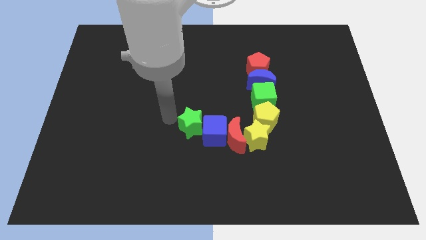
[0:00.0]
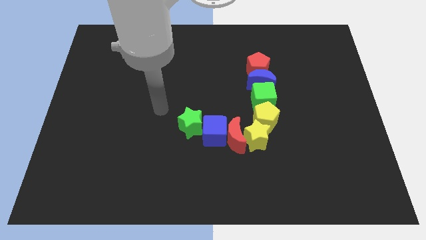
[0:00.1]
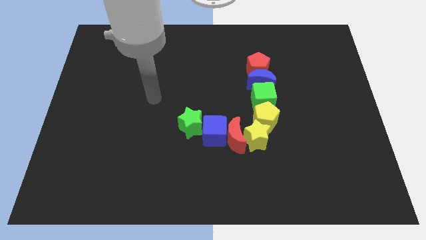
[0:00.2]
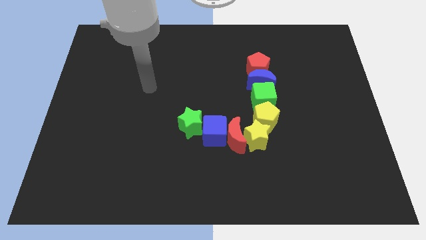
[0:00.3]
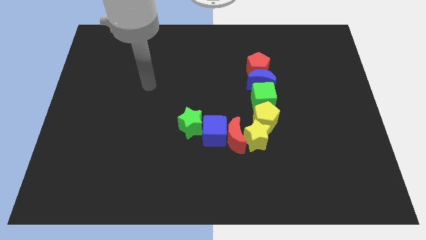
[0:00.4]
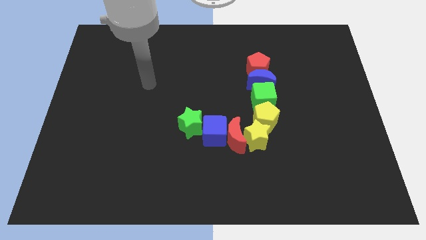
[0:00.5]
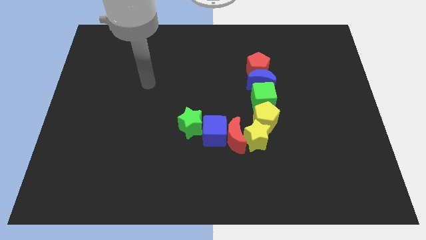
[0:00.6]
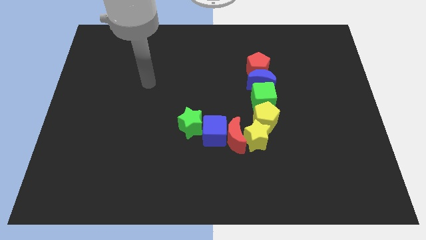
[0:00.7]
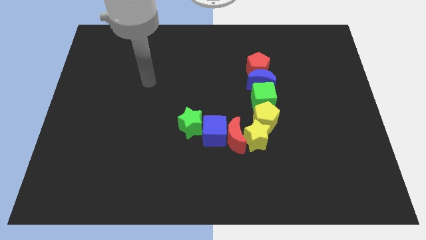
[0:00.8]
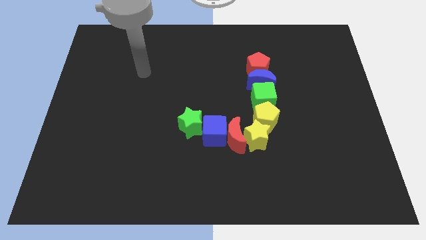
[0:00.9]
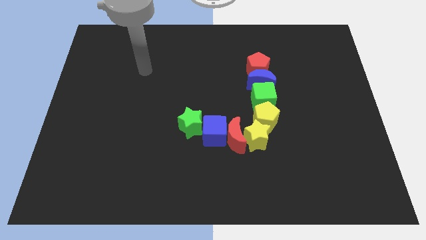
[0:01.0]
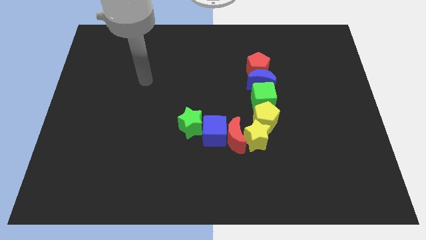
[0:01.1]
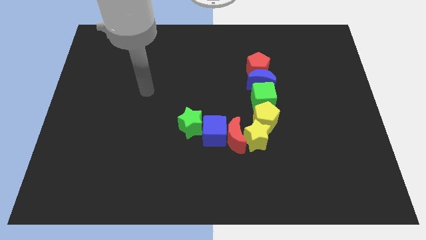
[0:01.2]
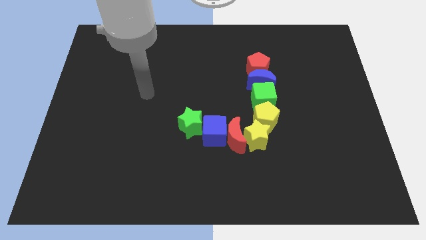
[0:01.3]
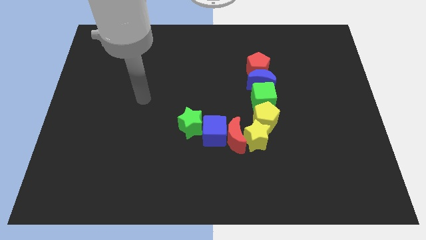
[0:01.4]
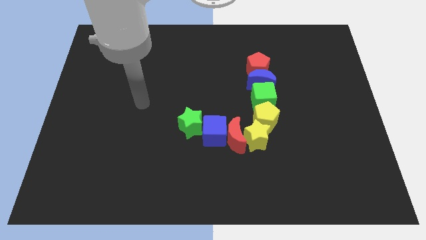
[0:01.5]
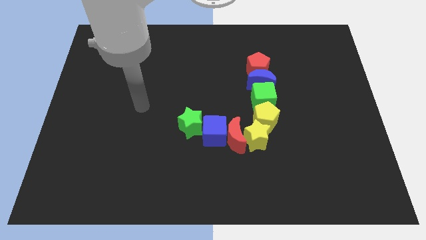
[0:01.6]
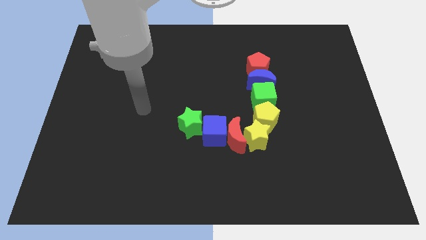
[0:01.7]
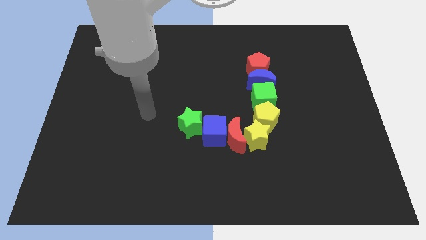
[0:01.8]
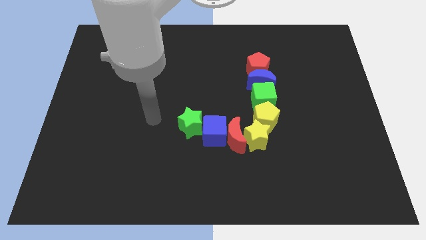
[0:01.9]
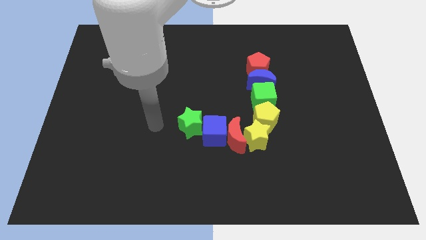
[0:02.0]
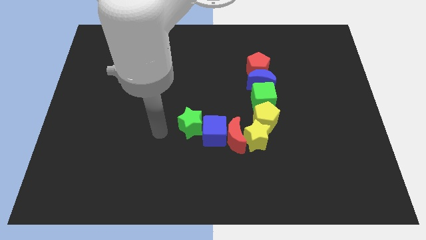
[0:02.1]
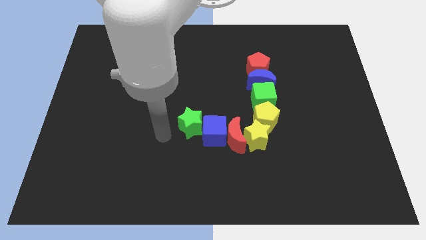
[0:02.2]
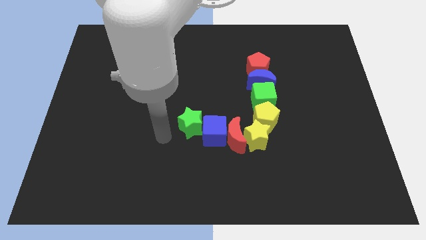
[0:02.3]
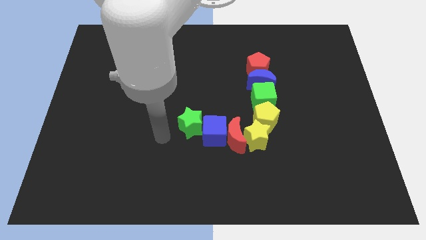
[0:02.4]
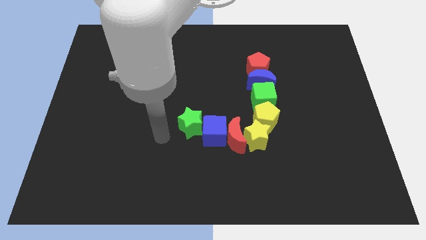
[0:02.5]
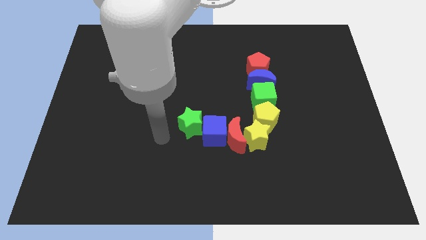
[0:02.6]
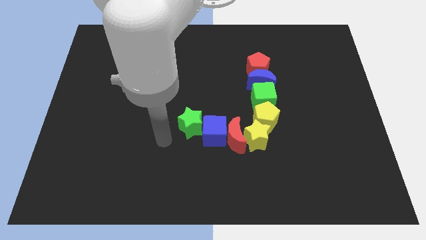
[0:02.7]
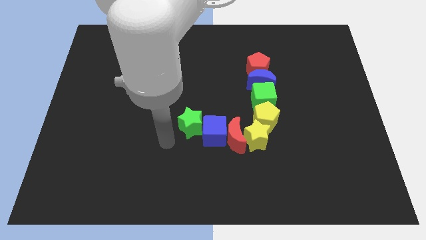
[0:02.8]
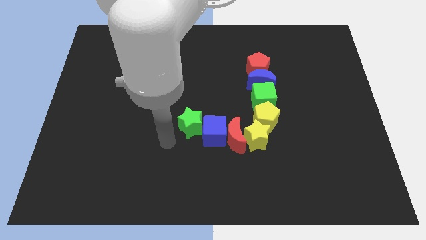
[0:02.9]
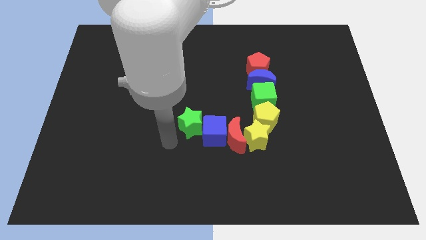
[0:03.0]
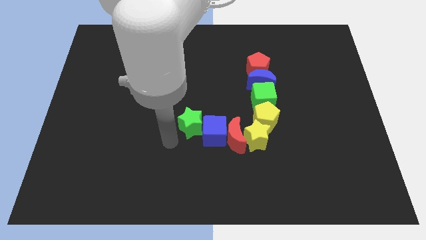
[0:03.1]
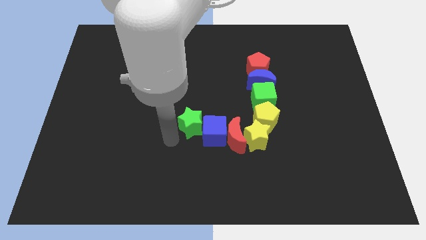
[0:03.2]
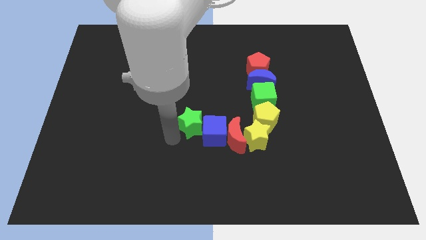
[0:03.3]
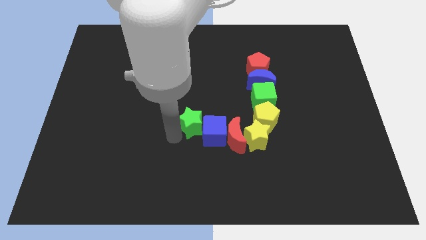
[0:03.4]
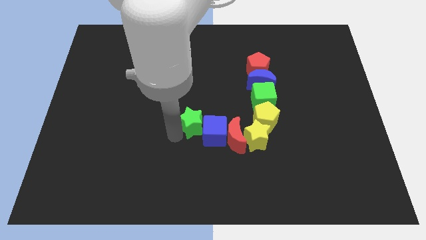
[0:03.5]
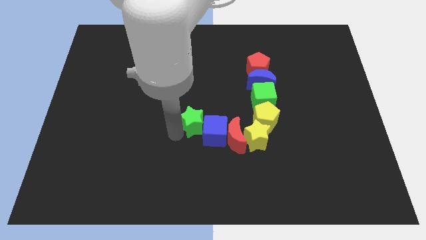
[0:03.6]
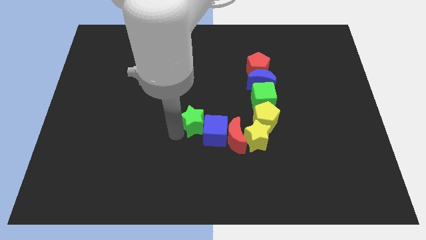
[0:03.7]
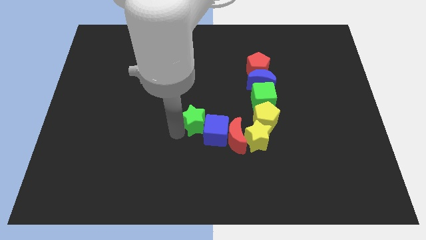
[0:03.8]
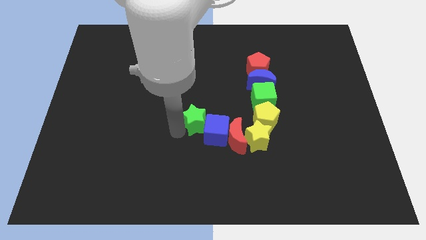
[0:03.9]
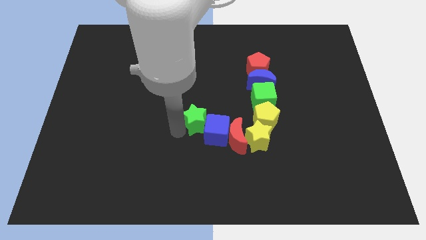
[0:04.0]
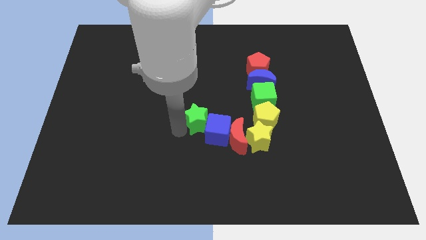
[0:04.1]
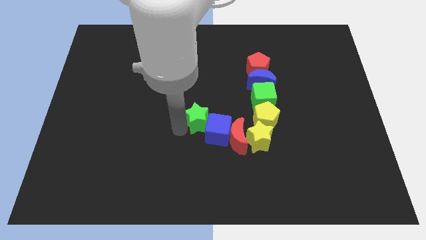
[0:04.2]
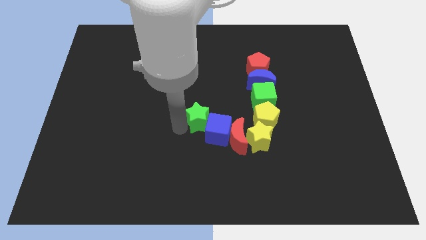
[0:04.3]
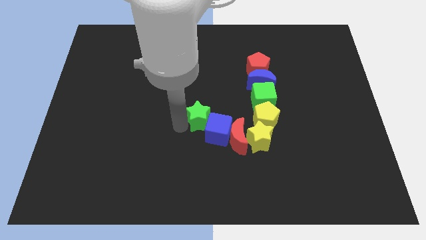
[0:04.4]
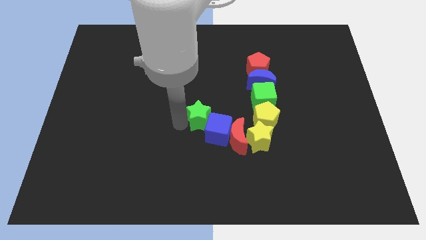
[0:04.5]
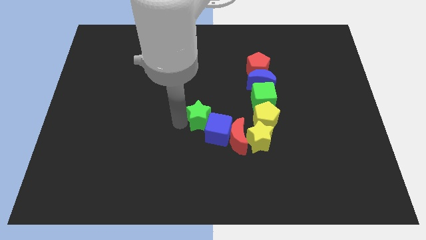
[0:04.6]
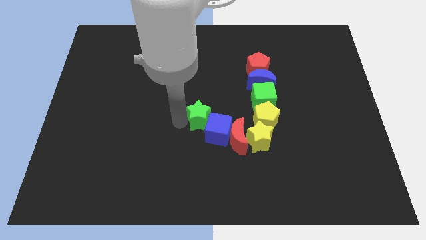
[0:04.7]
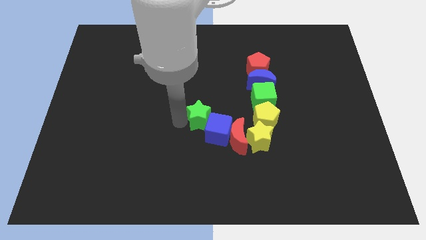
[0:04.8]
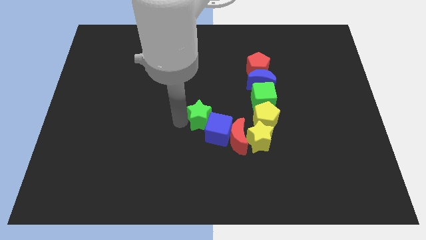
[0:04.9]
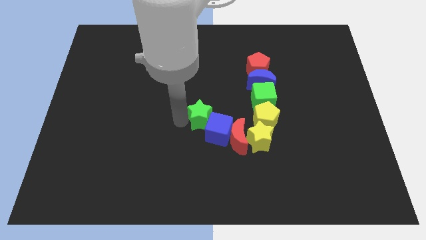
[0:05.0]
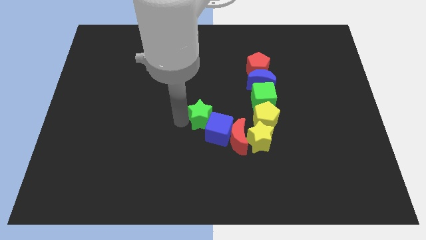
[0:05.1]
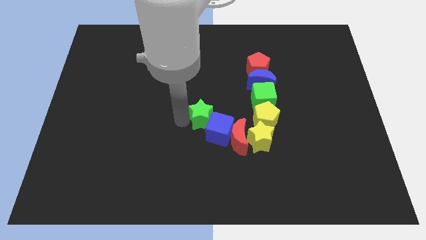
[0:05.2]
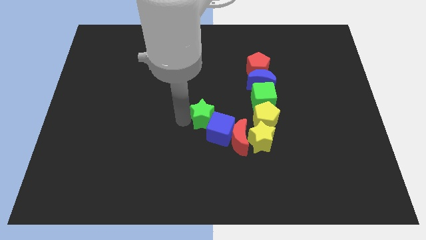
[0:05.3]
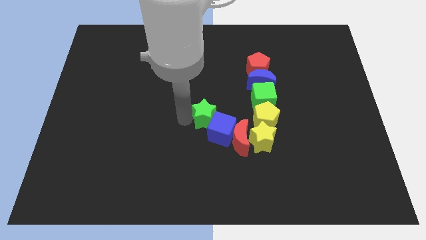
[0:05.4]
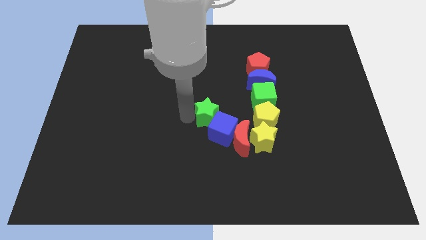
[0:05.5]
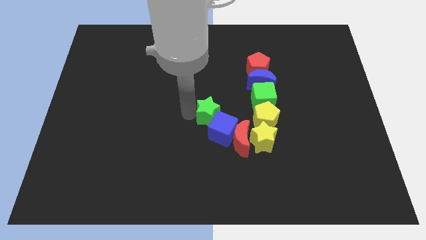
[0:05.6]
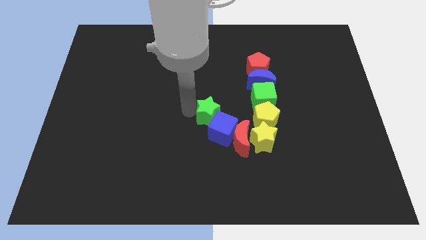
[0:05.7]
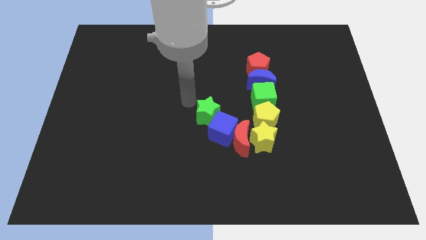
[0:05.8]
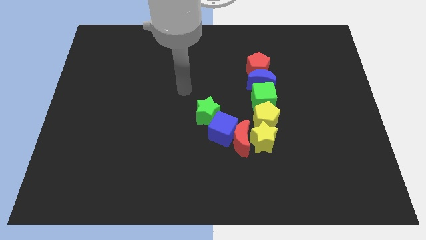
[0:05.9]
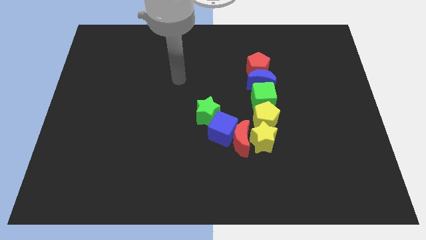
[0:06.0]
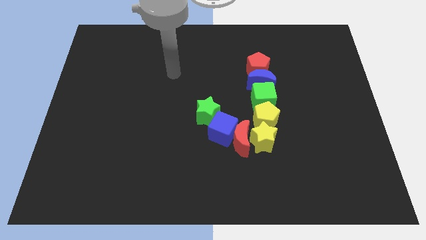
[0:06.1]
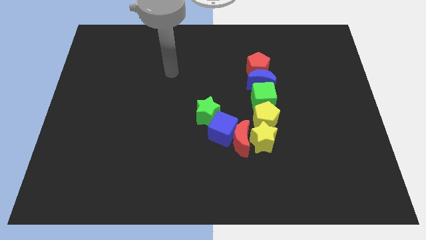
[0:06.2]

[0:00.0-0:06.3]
turn the green star blue cube red moon and yellow star towards the vertical line of blocks

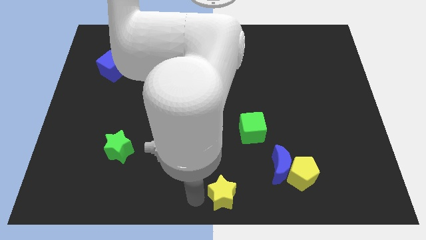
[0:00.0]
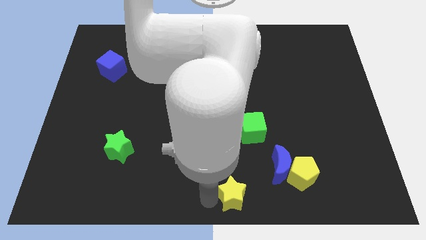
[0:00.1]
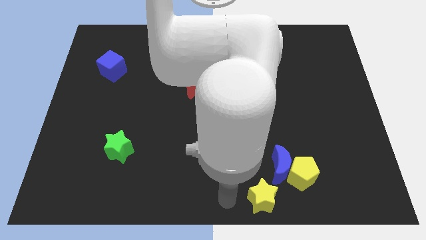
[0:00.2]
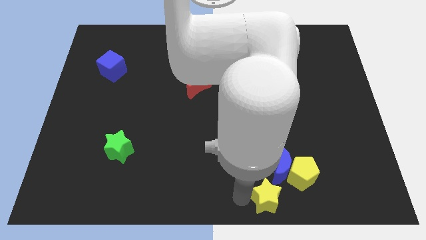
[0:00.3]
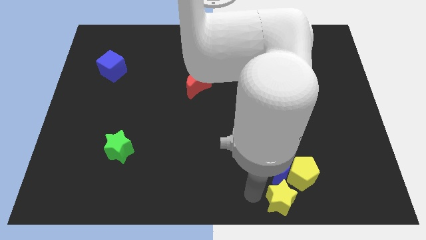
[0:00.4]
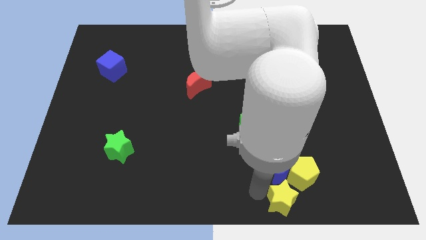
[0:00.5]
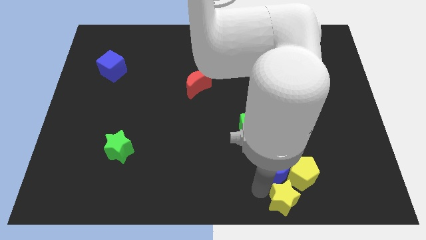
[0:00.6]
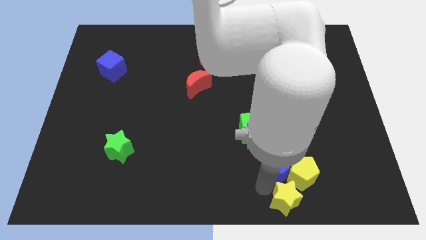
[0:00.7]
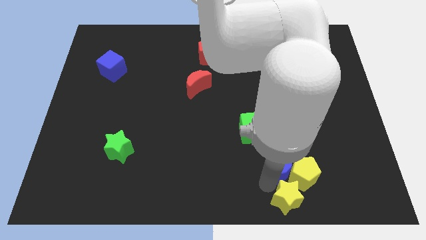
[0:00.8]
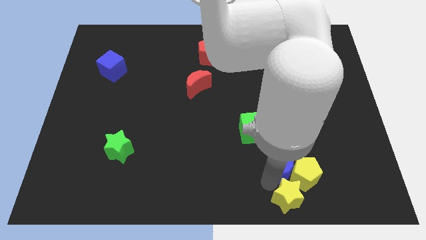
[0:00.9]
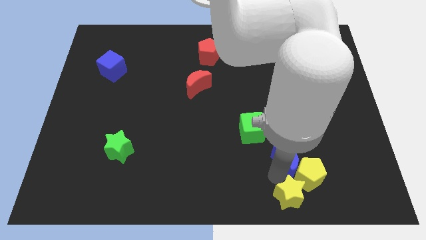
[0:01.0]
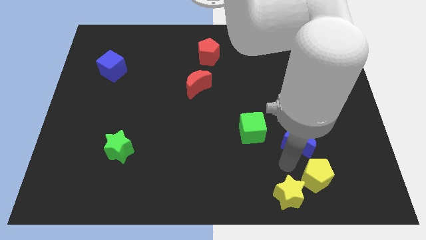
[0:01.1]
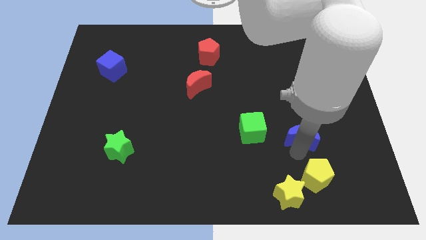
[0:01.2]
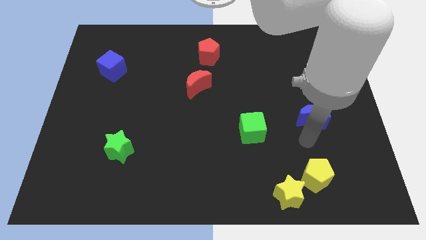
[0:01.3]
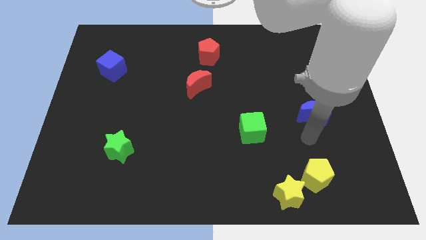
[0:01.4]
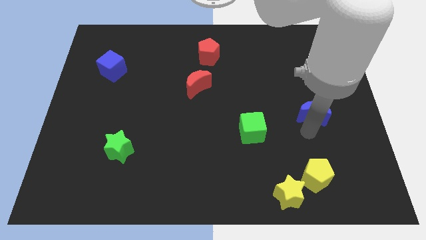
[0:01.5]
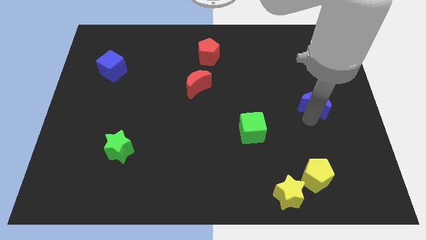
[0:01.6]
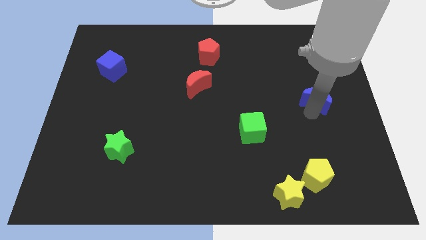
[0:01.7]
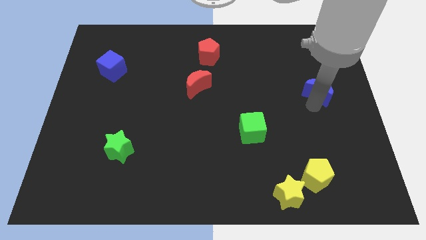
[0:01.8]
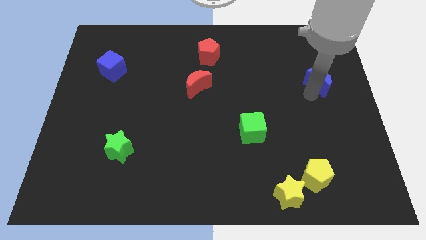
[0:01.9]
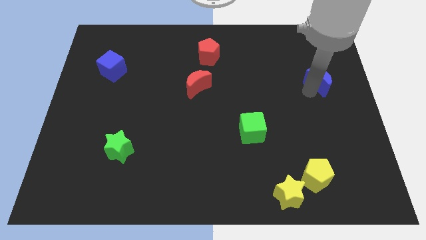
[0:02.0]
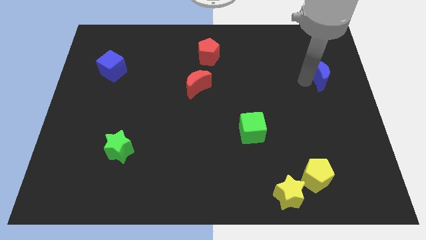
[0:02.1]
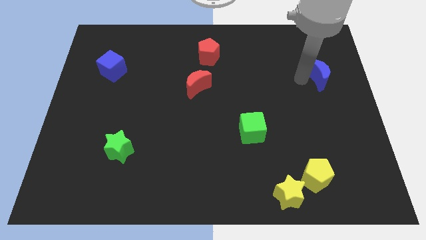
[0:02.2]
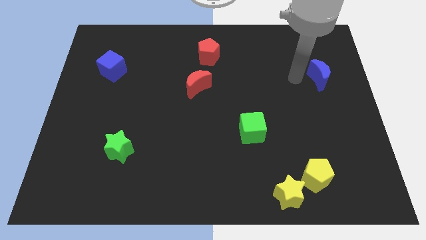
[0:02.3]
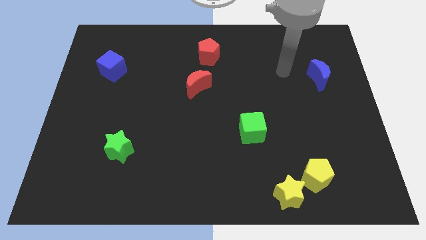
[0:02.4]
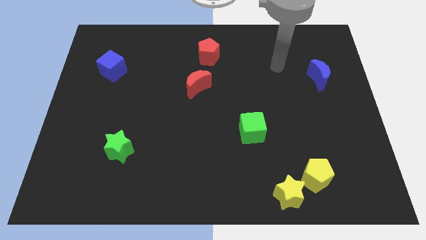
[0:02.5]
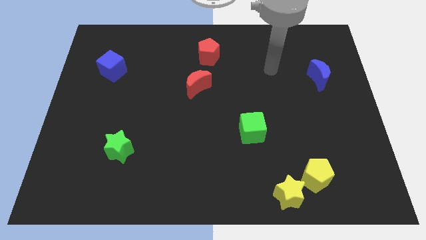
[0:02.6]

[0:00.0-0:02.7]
push the blue crescent parallel to the red crescent
